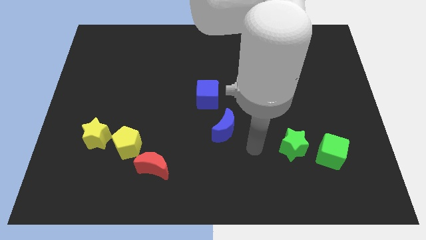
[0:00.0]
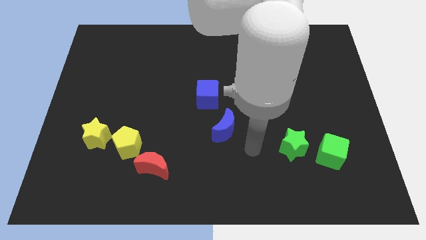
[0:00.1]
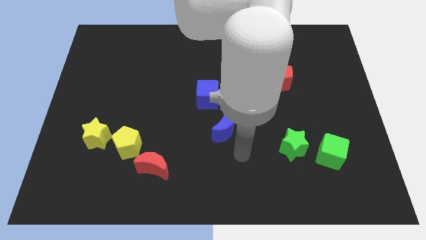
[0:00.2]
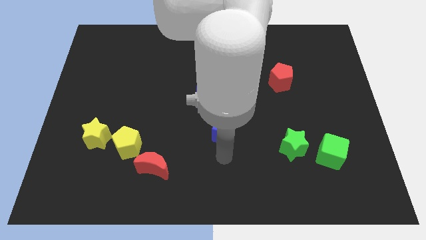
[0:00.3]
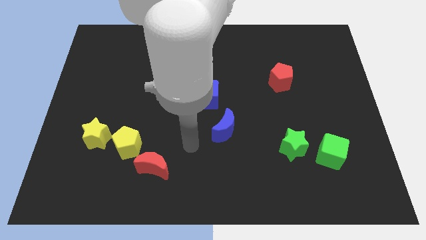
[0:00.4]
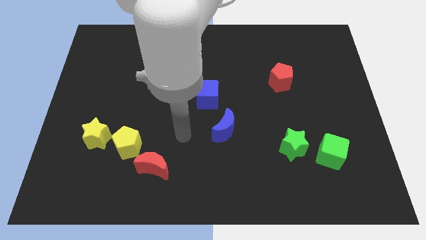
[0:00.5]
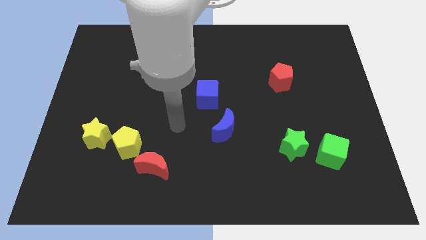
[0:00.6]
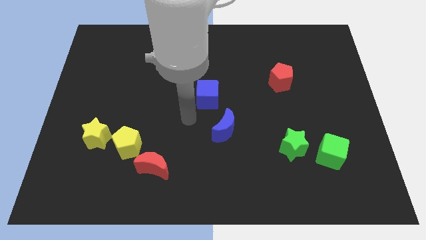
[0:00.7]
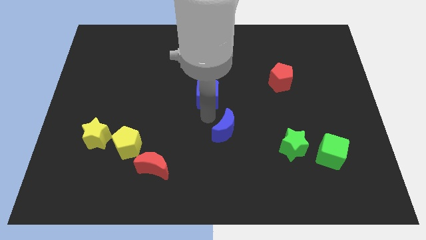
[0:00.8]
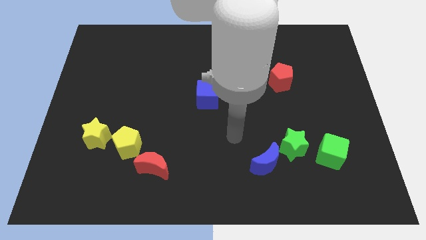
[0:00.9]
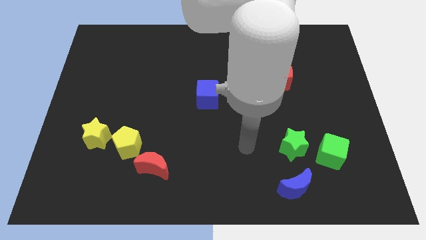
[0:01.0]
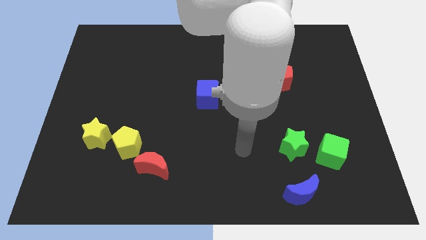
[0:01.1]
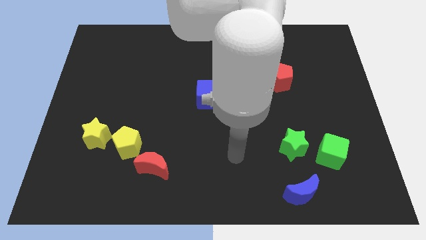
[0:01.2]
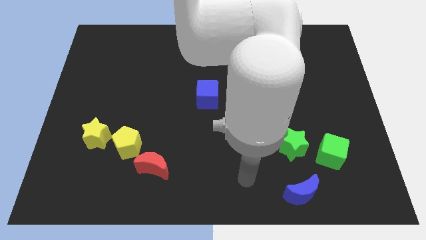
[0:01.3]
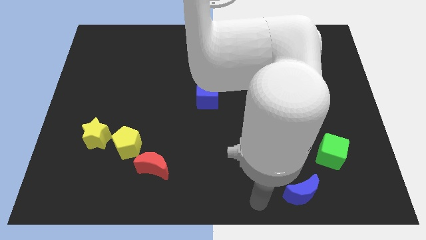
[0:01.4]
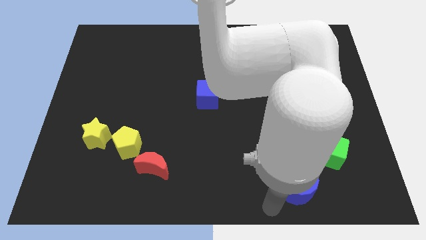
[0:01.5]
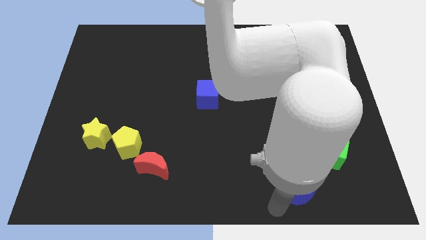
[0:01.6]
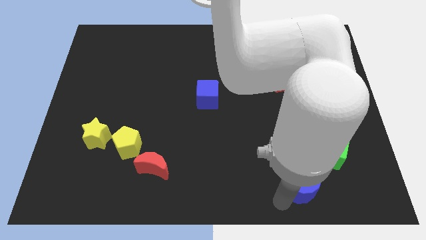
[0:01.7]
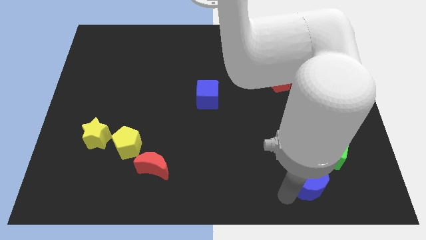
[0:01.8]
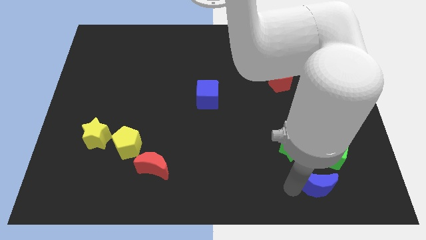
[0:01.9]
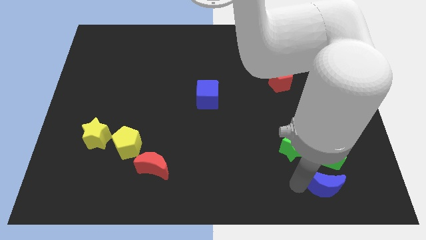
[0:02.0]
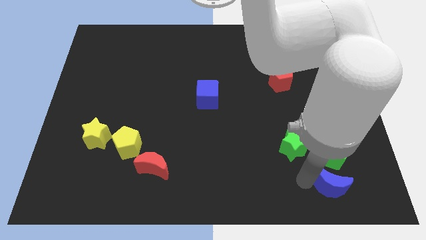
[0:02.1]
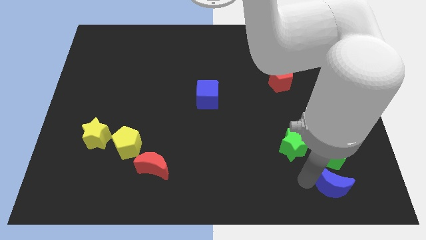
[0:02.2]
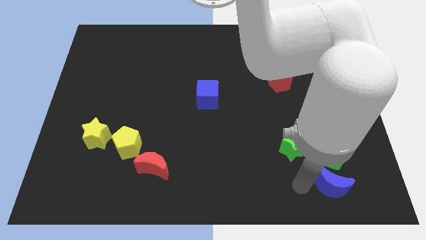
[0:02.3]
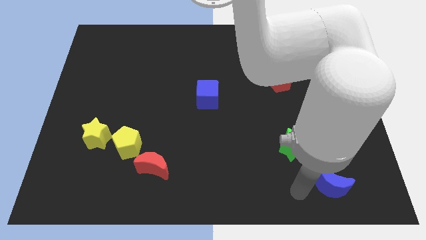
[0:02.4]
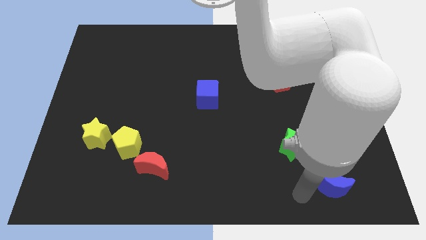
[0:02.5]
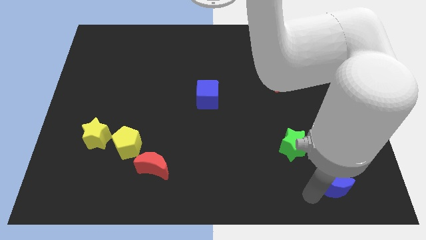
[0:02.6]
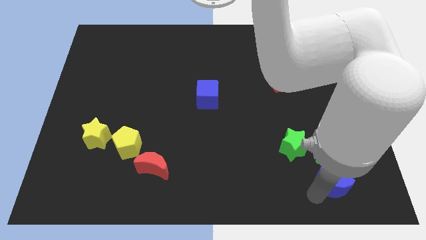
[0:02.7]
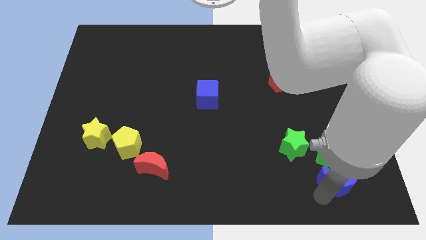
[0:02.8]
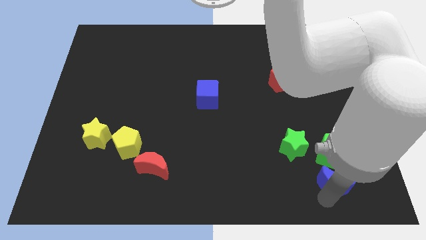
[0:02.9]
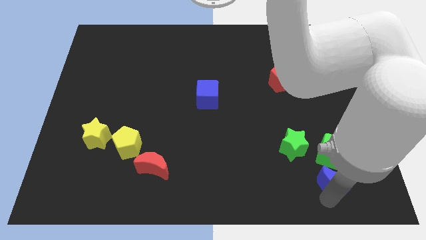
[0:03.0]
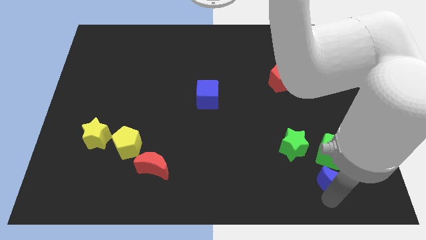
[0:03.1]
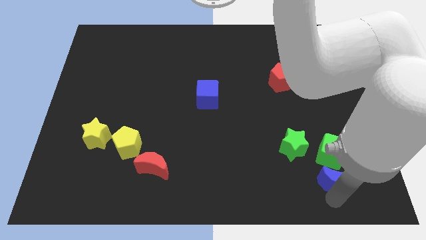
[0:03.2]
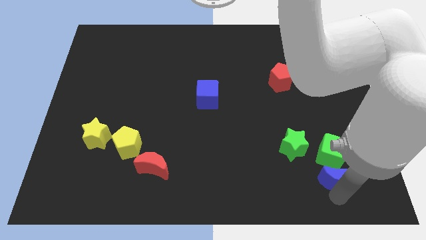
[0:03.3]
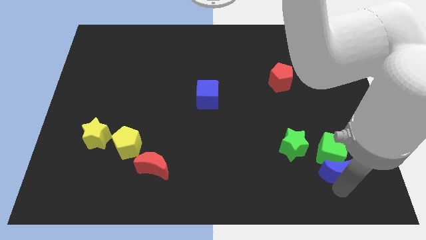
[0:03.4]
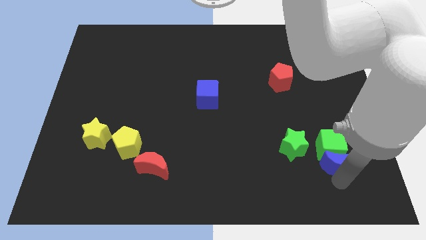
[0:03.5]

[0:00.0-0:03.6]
slide the blue moon next to the green cube

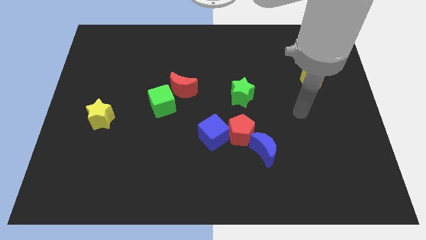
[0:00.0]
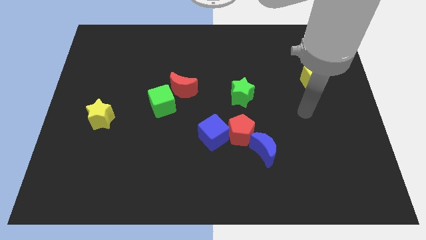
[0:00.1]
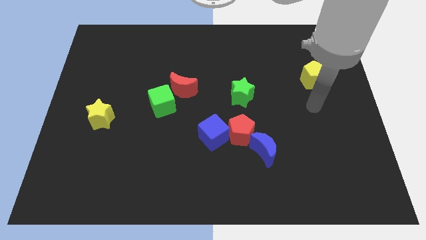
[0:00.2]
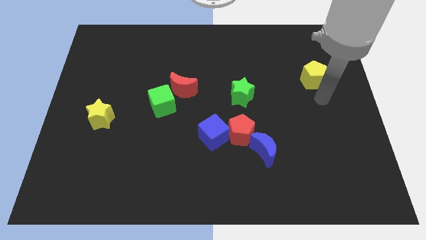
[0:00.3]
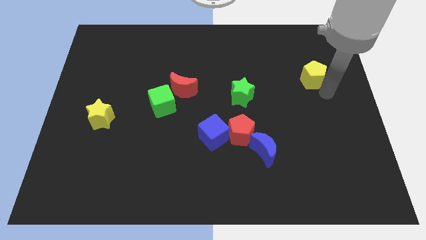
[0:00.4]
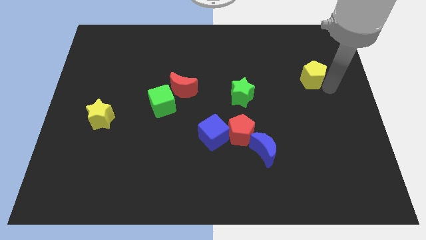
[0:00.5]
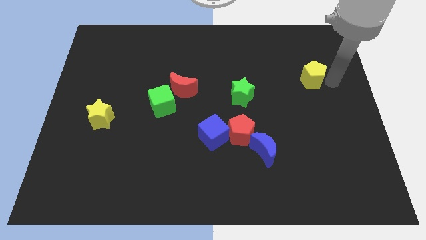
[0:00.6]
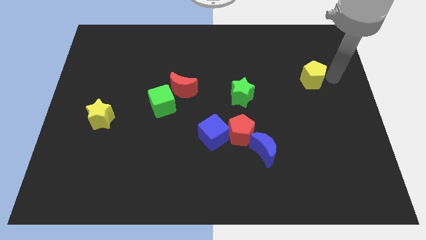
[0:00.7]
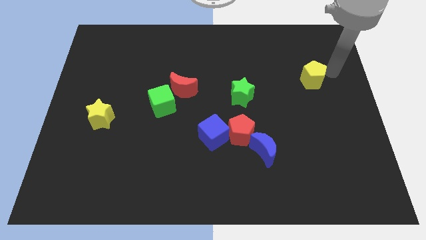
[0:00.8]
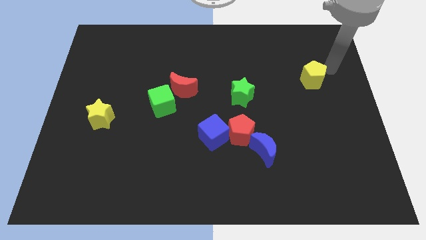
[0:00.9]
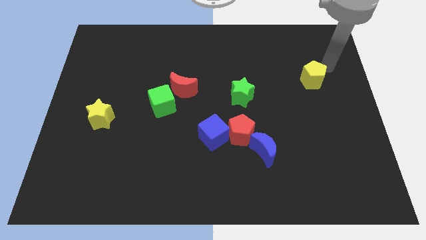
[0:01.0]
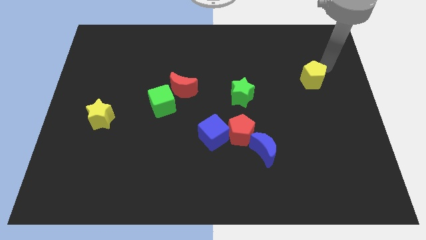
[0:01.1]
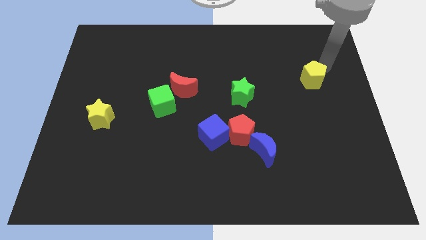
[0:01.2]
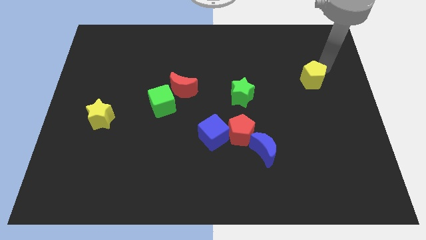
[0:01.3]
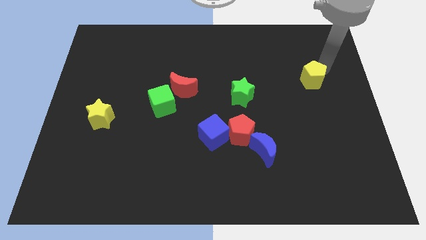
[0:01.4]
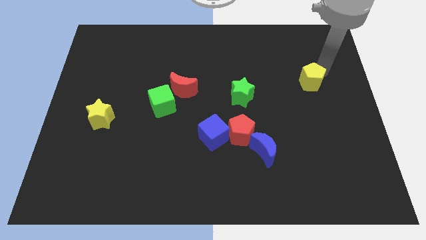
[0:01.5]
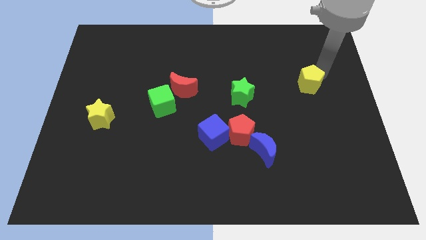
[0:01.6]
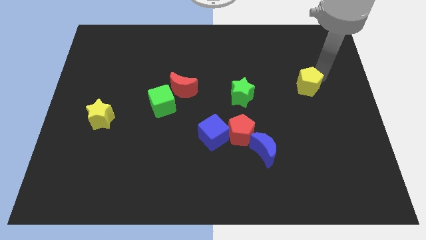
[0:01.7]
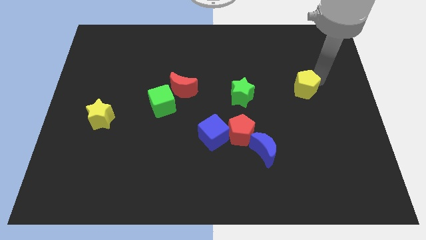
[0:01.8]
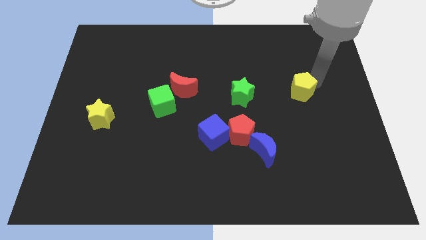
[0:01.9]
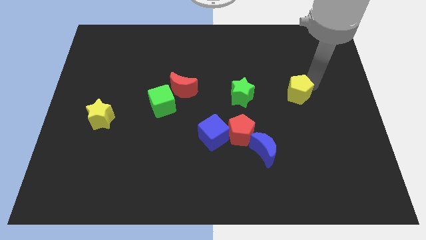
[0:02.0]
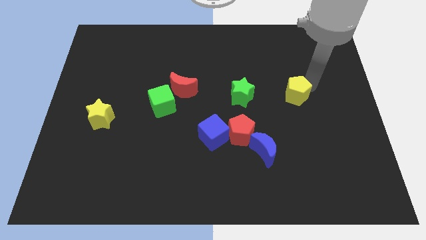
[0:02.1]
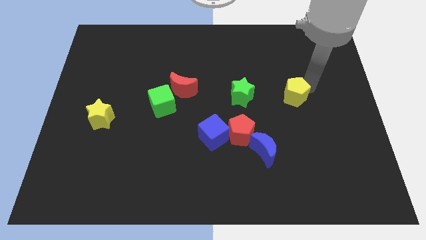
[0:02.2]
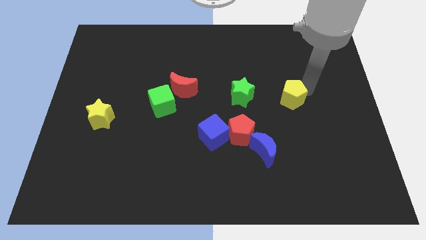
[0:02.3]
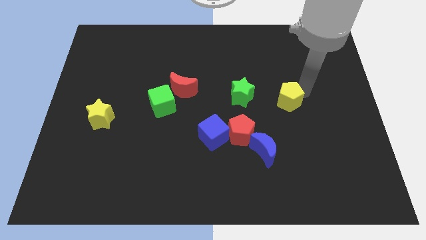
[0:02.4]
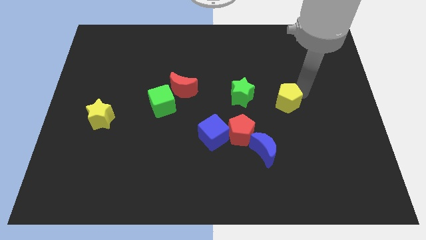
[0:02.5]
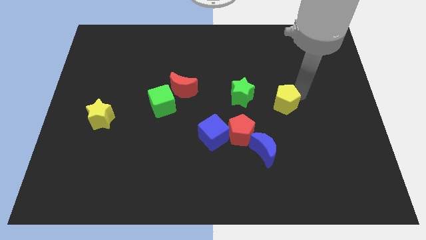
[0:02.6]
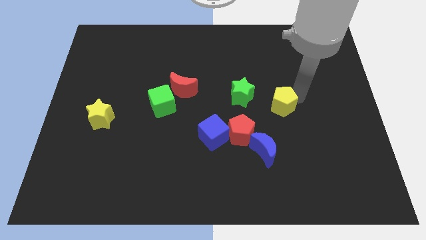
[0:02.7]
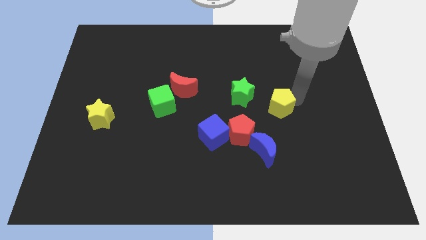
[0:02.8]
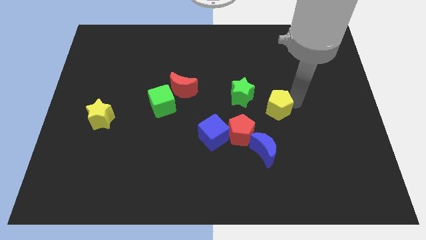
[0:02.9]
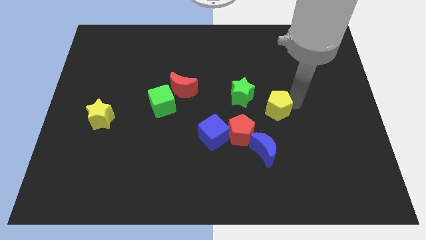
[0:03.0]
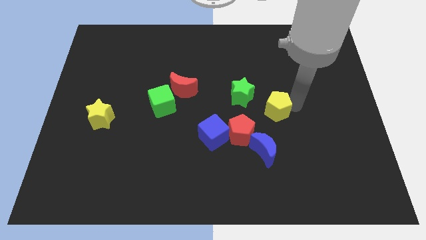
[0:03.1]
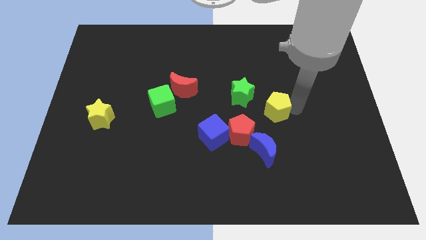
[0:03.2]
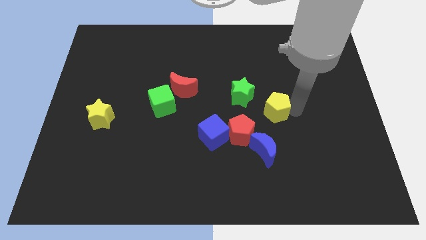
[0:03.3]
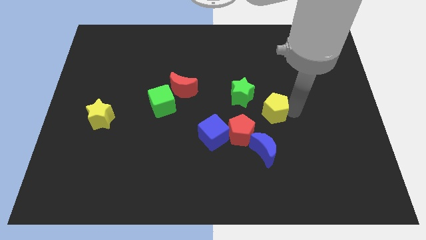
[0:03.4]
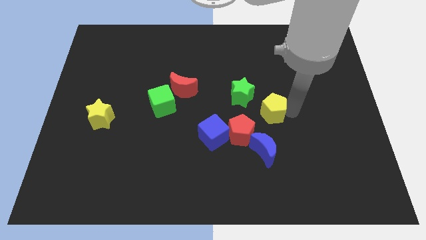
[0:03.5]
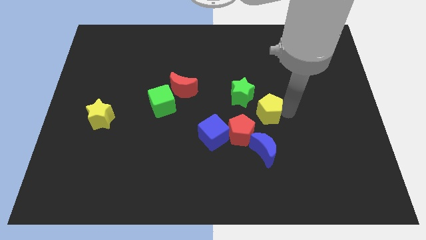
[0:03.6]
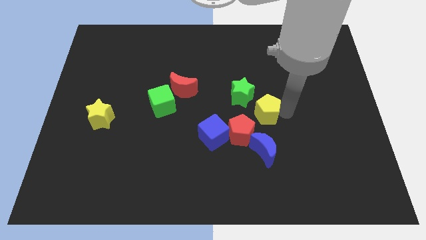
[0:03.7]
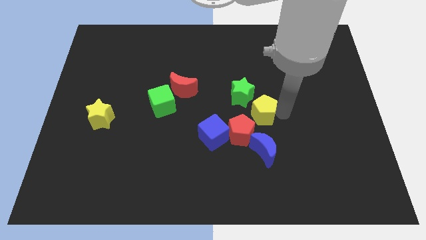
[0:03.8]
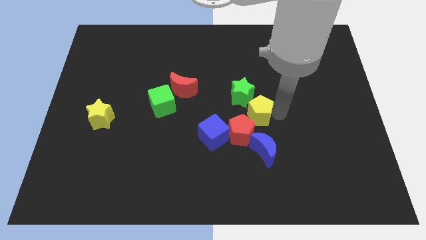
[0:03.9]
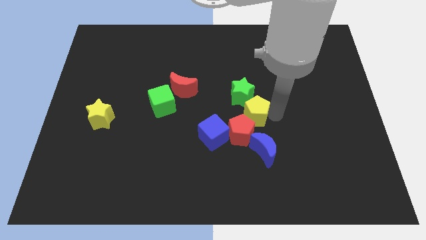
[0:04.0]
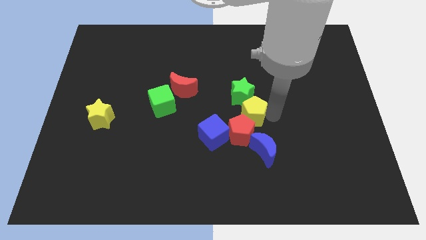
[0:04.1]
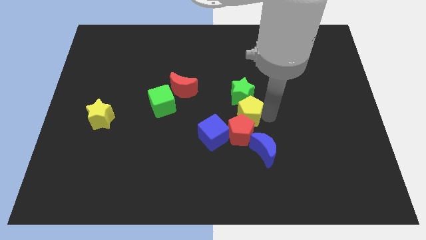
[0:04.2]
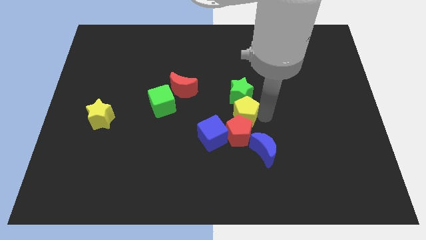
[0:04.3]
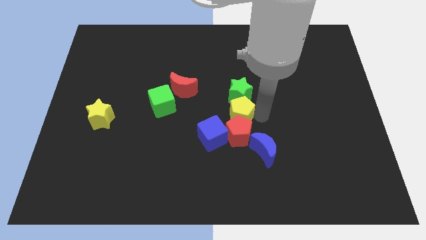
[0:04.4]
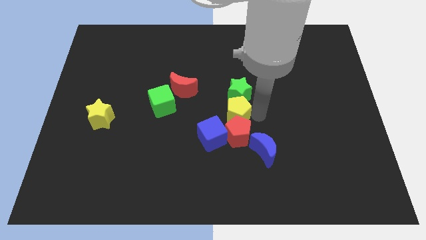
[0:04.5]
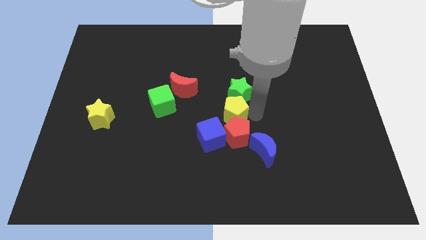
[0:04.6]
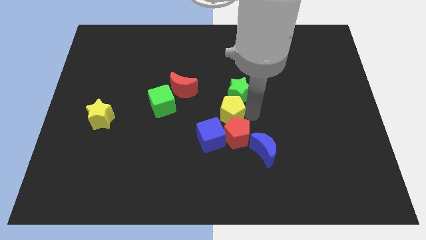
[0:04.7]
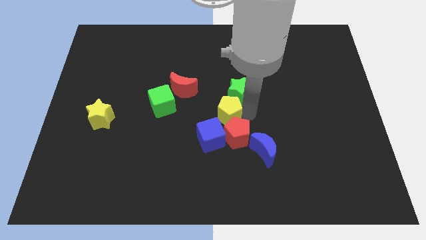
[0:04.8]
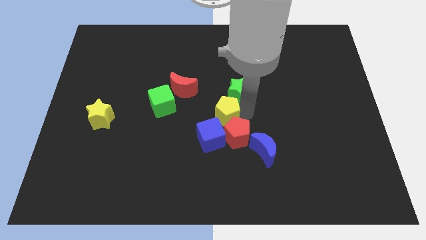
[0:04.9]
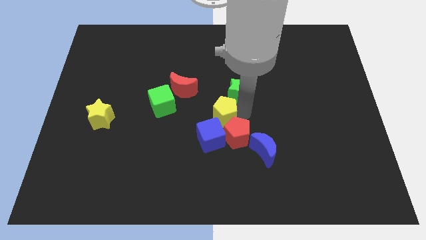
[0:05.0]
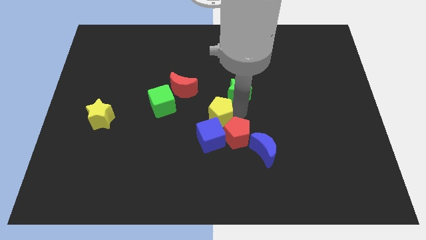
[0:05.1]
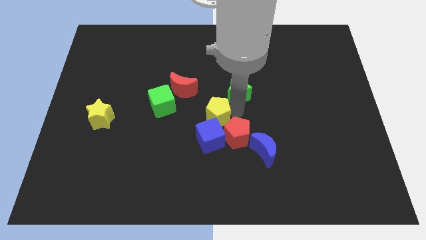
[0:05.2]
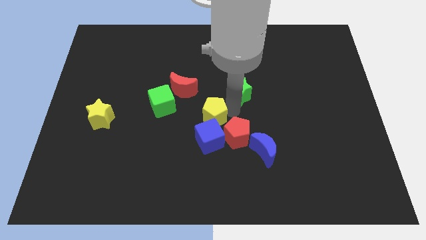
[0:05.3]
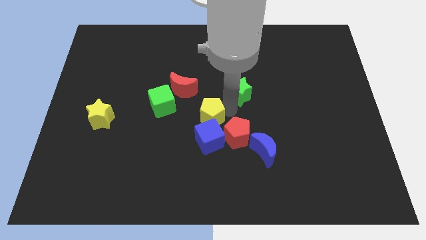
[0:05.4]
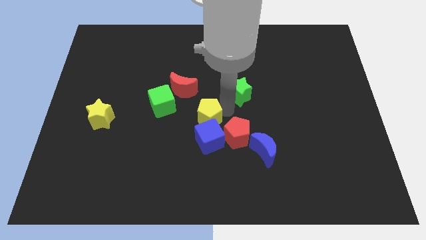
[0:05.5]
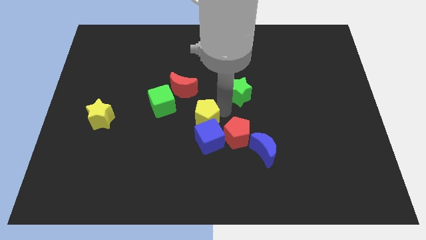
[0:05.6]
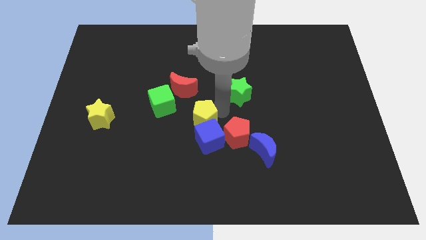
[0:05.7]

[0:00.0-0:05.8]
move the yellow pentagon towards the blue cube
